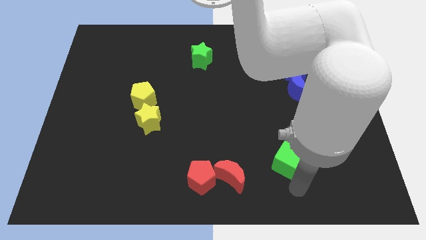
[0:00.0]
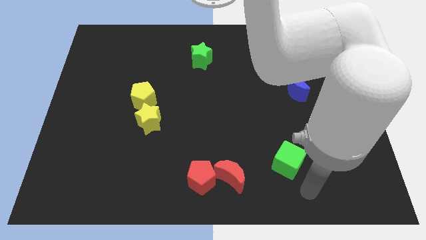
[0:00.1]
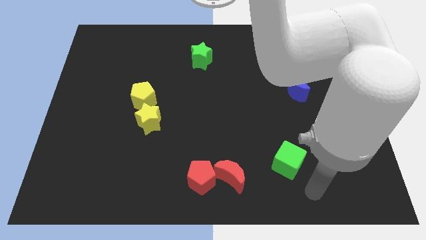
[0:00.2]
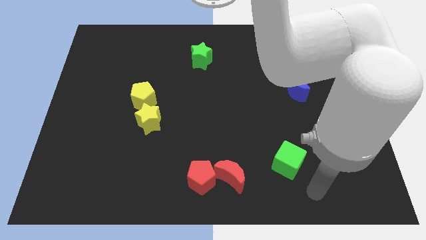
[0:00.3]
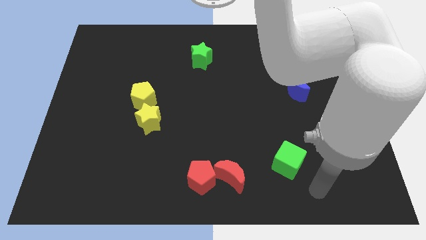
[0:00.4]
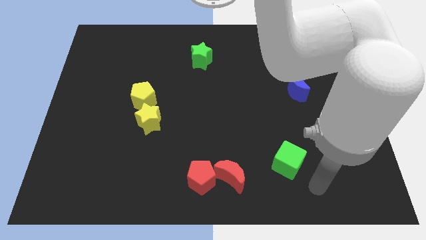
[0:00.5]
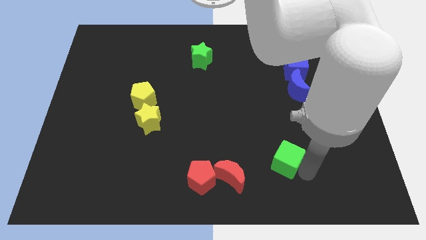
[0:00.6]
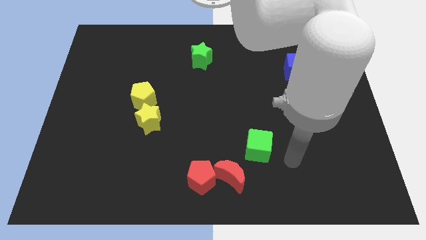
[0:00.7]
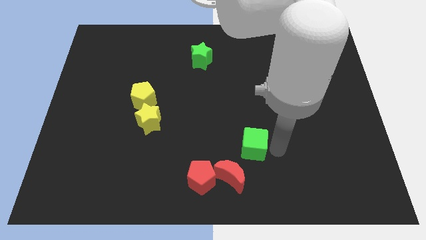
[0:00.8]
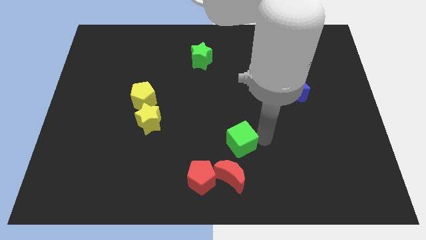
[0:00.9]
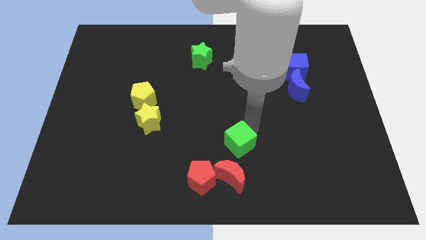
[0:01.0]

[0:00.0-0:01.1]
slide green cube above the red moon

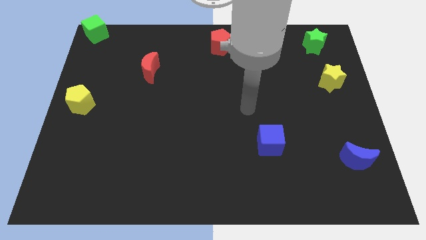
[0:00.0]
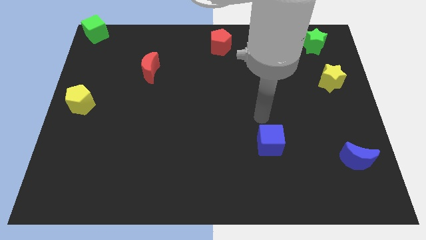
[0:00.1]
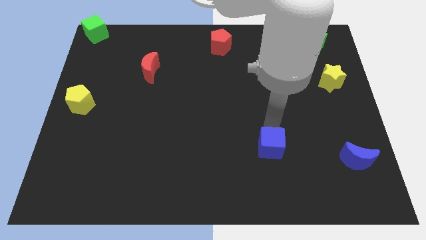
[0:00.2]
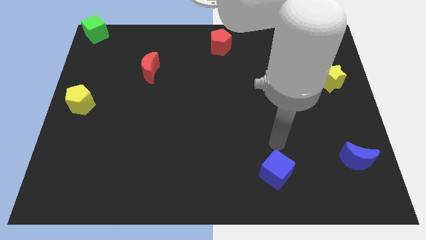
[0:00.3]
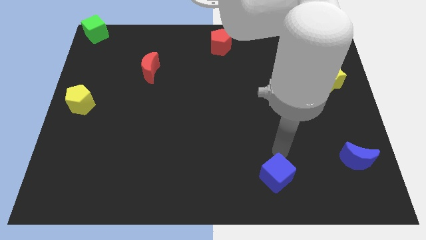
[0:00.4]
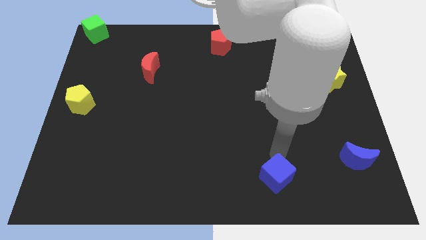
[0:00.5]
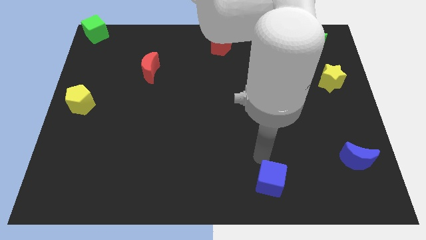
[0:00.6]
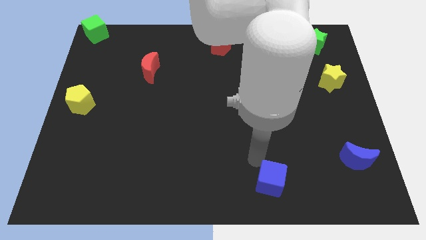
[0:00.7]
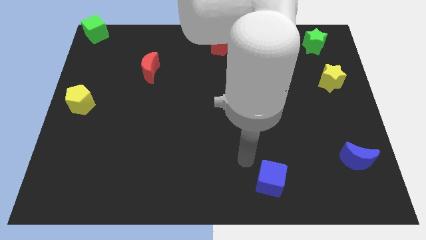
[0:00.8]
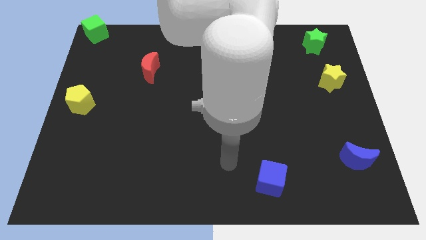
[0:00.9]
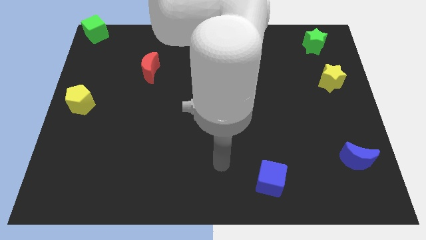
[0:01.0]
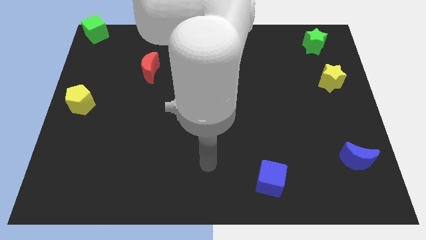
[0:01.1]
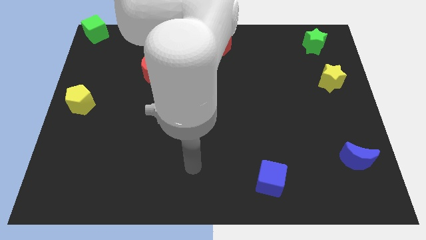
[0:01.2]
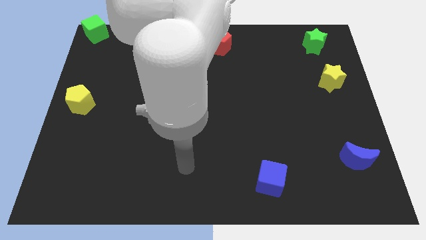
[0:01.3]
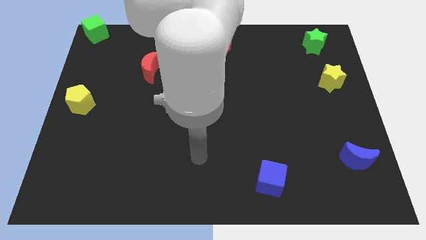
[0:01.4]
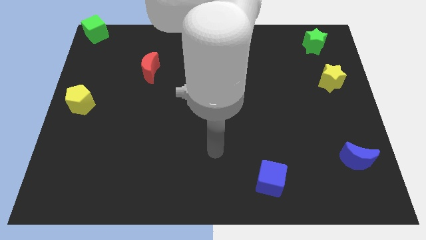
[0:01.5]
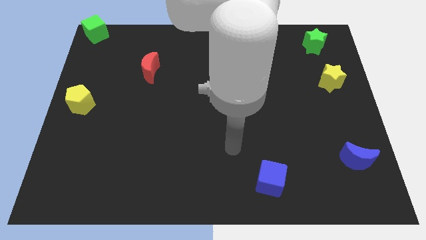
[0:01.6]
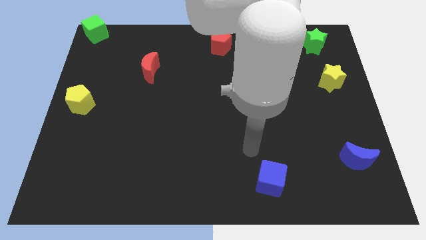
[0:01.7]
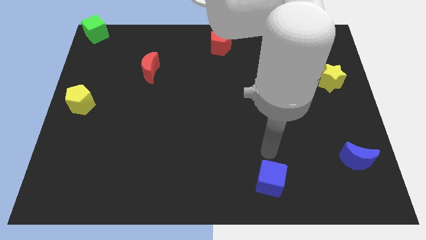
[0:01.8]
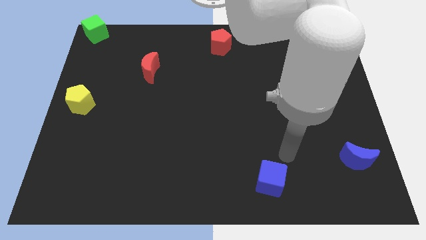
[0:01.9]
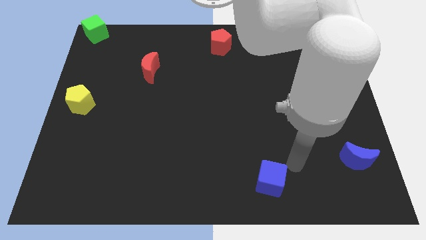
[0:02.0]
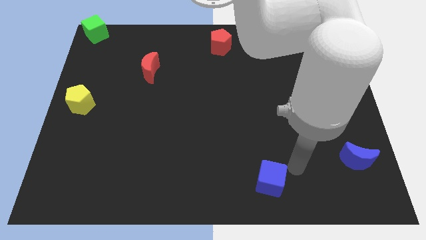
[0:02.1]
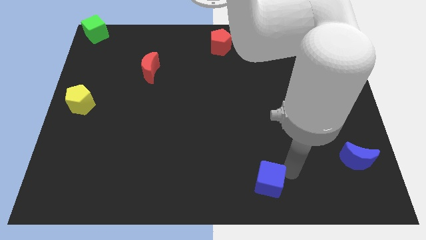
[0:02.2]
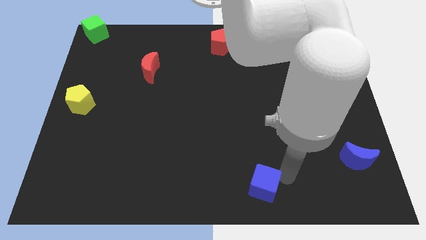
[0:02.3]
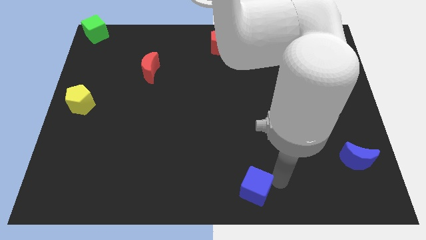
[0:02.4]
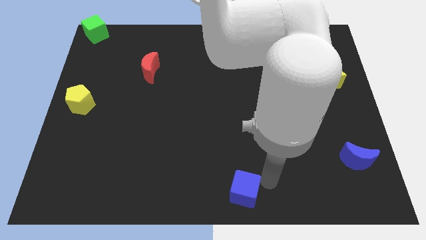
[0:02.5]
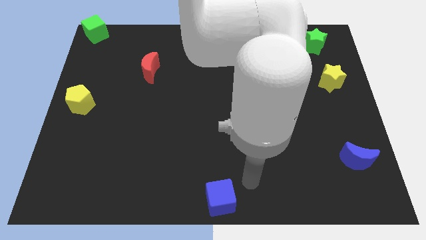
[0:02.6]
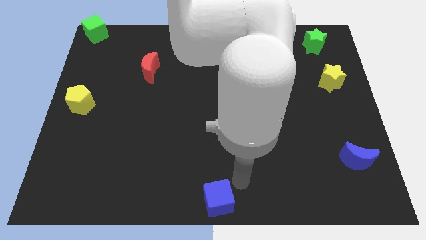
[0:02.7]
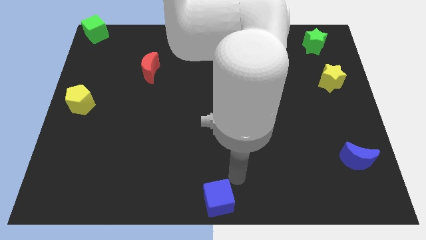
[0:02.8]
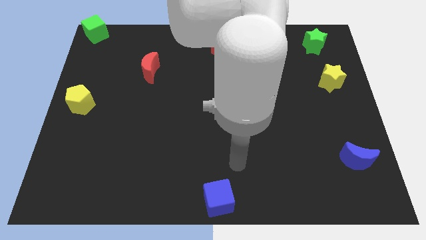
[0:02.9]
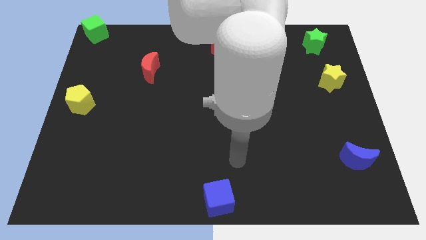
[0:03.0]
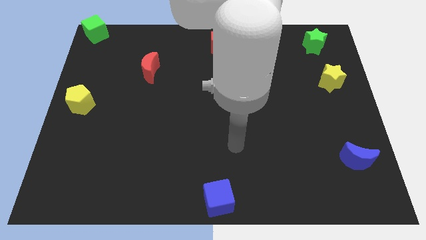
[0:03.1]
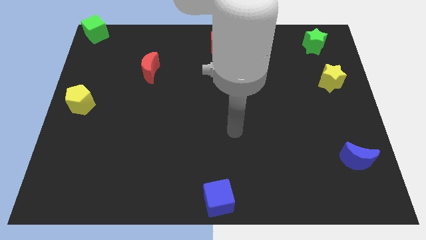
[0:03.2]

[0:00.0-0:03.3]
push blue cube to the bottom center of the board

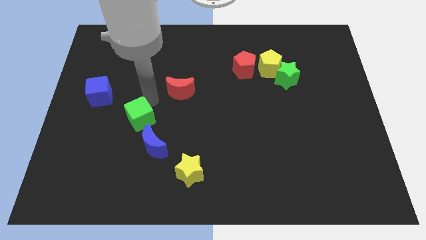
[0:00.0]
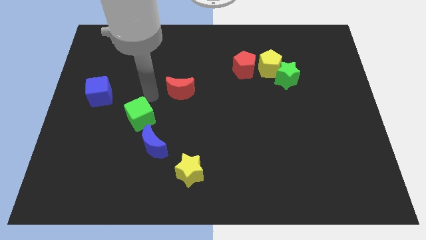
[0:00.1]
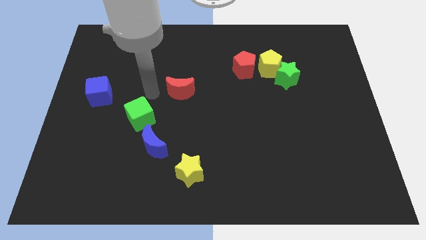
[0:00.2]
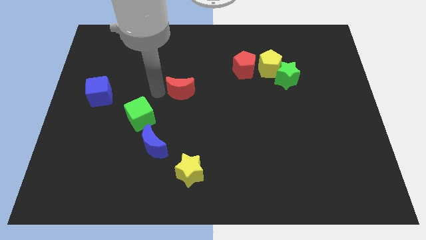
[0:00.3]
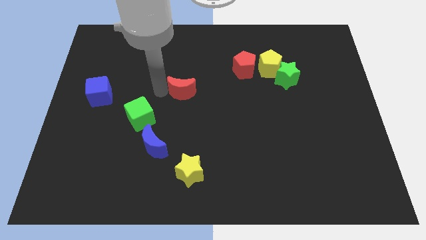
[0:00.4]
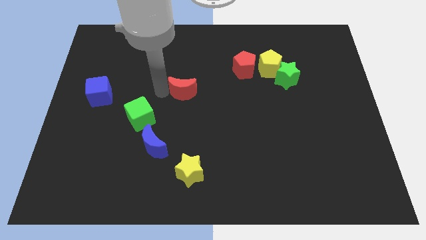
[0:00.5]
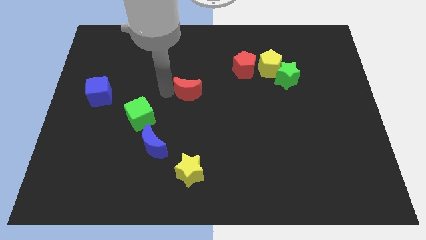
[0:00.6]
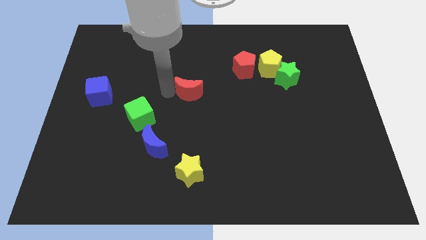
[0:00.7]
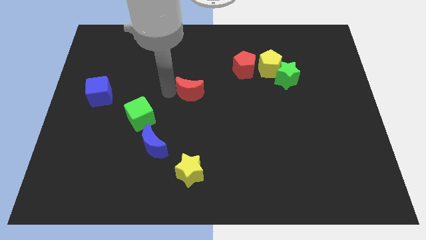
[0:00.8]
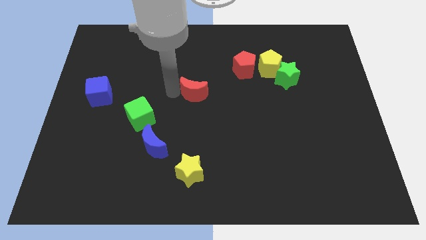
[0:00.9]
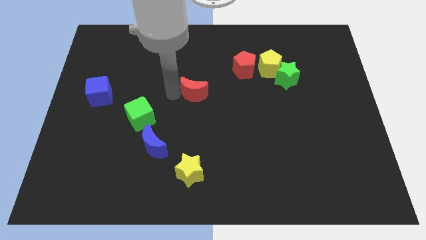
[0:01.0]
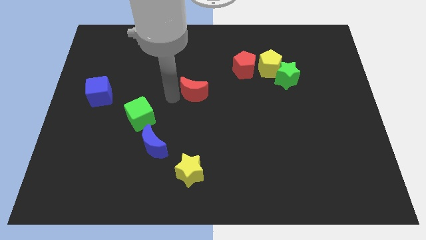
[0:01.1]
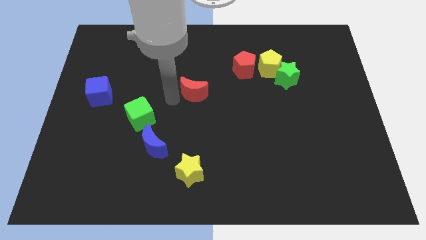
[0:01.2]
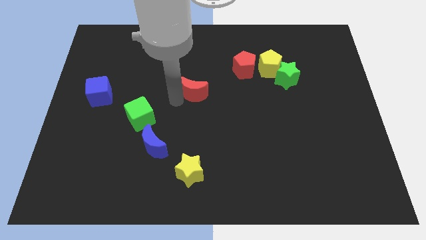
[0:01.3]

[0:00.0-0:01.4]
move red crescent to the center of the board

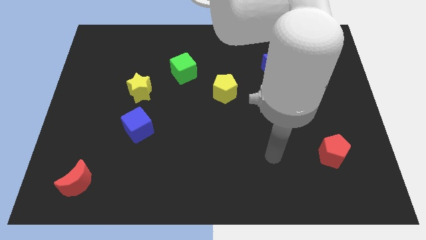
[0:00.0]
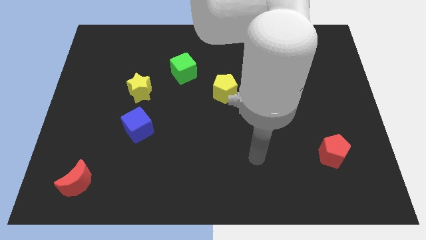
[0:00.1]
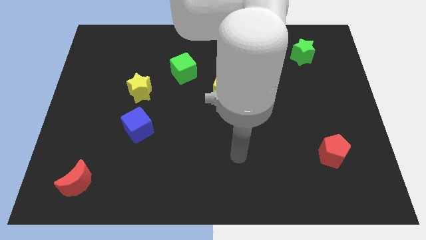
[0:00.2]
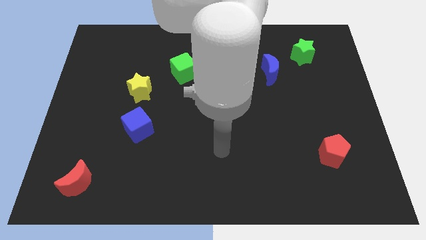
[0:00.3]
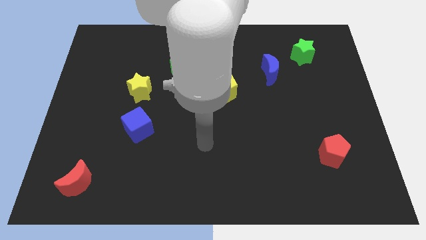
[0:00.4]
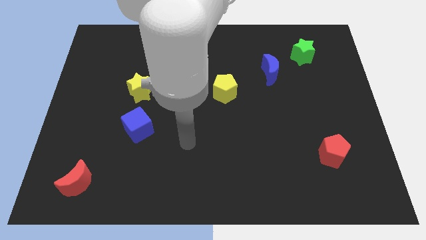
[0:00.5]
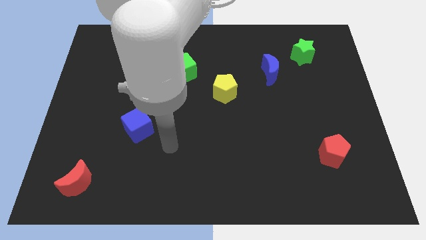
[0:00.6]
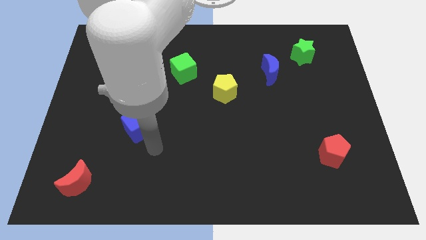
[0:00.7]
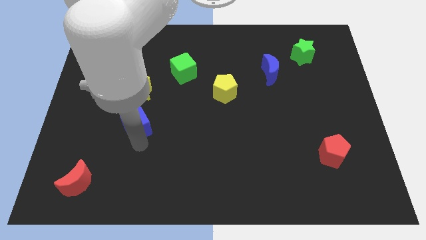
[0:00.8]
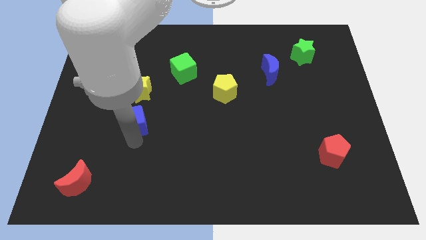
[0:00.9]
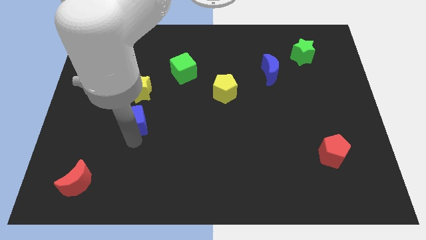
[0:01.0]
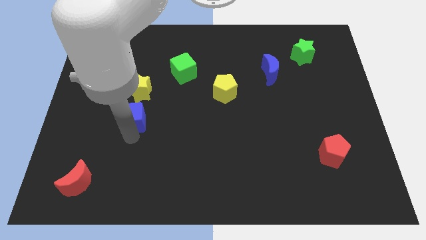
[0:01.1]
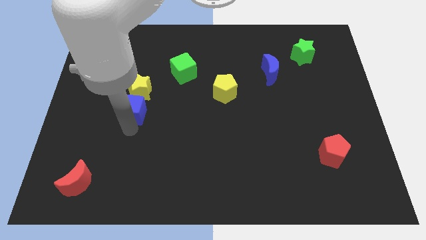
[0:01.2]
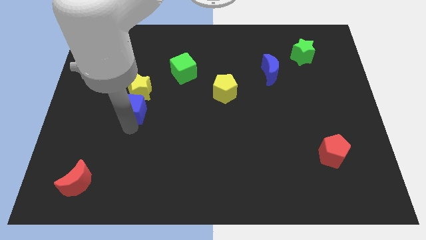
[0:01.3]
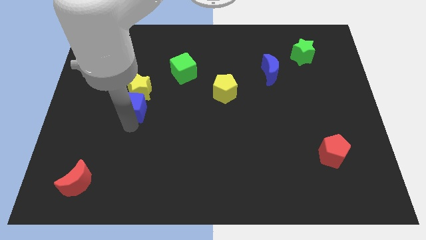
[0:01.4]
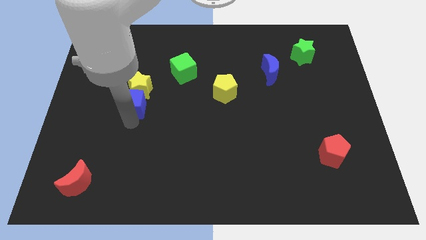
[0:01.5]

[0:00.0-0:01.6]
place the blue cube down to the yellow star

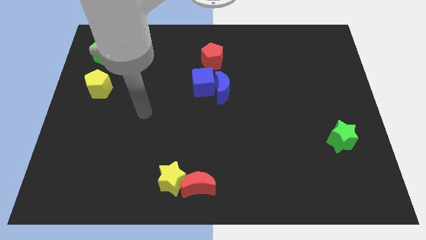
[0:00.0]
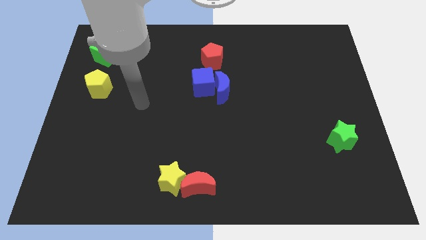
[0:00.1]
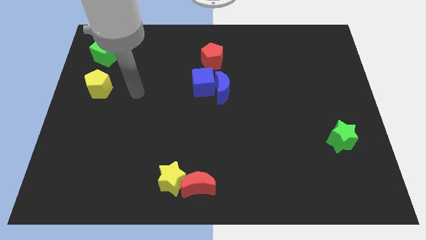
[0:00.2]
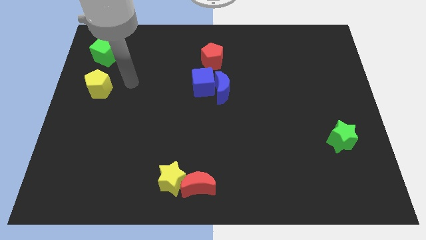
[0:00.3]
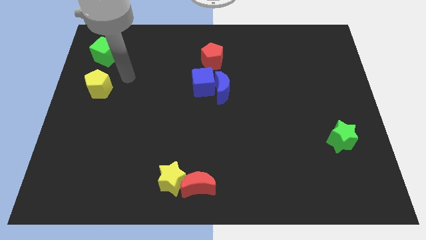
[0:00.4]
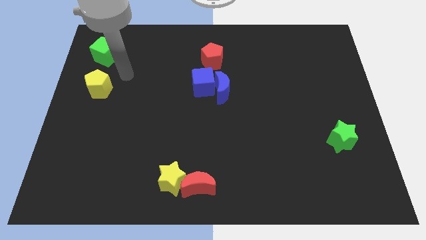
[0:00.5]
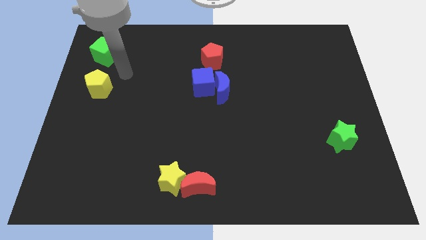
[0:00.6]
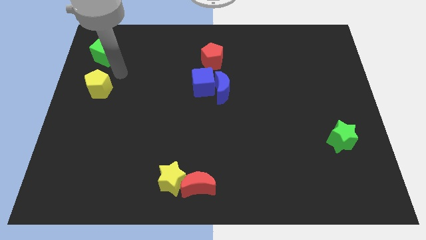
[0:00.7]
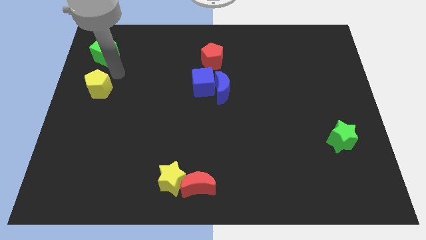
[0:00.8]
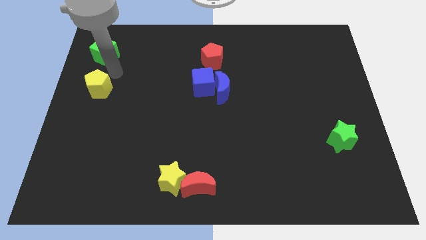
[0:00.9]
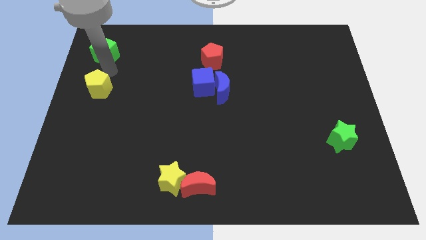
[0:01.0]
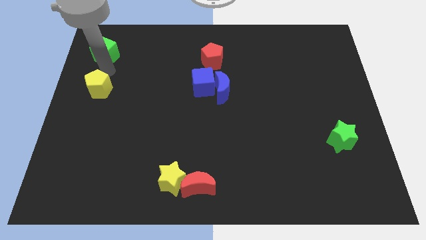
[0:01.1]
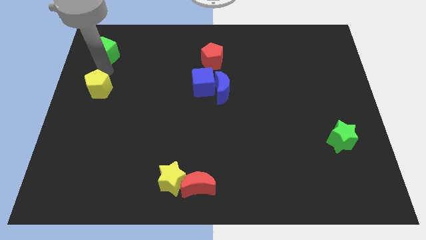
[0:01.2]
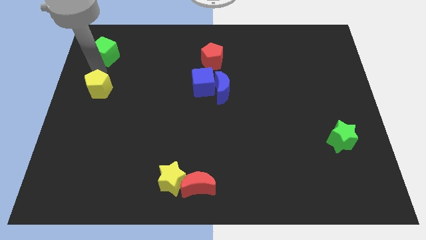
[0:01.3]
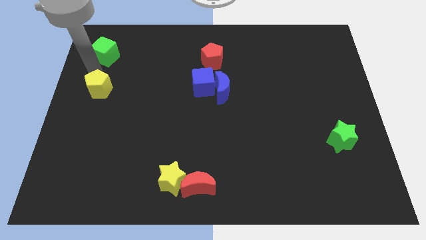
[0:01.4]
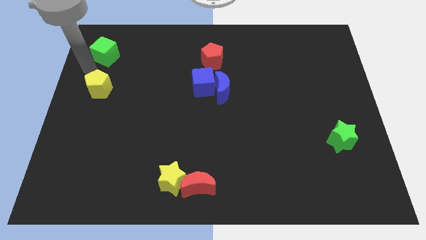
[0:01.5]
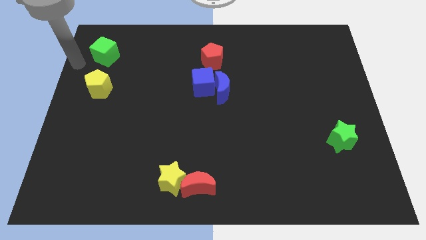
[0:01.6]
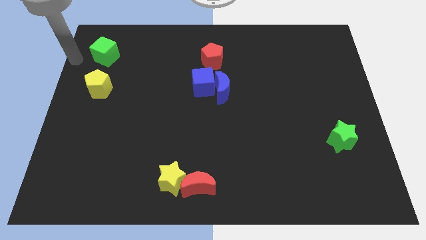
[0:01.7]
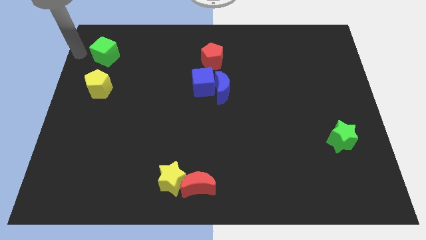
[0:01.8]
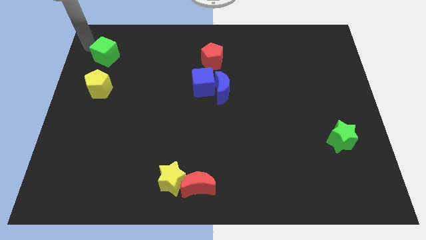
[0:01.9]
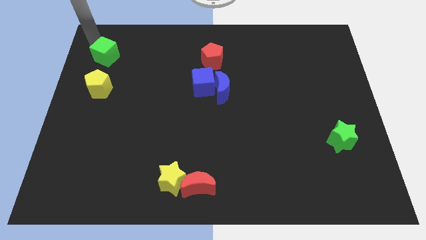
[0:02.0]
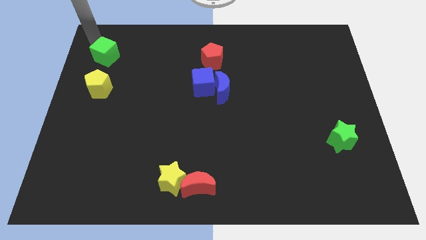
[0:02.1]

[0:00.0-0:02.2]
go close to the right side of the green cube
